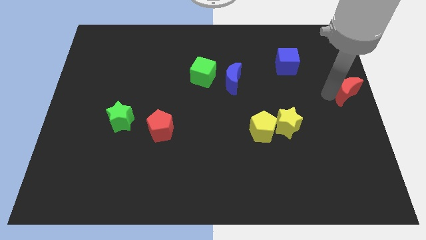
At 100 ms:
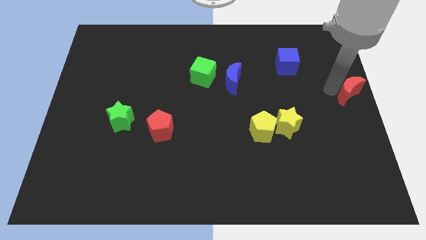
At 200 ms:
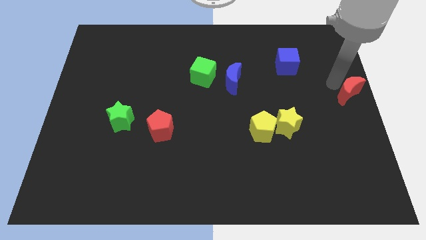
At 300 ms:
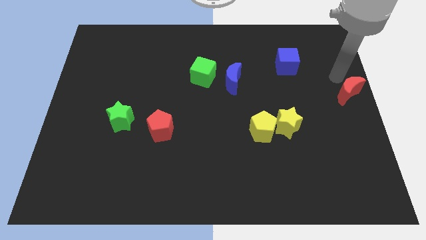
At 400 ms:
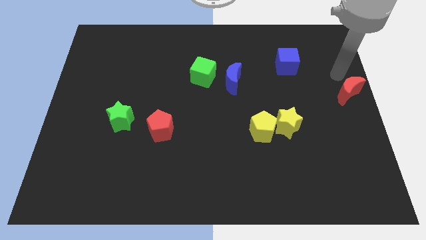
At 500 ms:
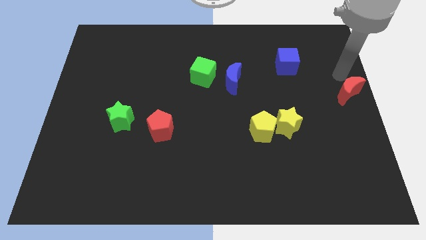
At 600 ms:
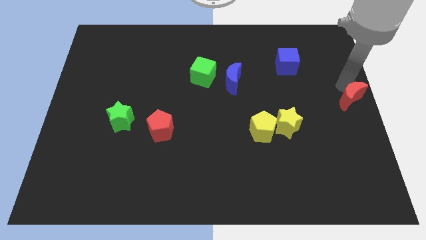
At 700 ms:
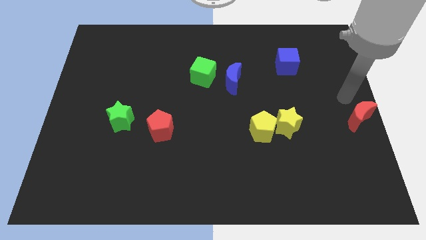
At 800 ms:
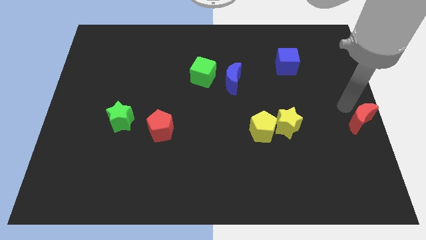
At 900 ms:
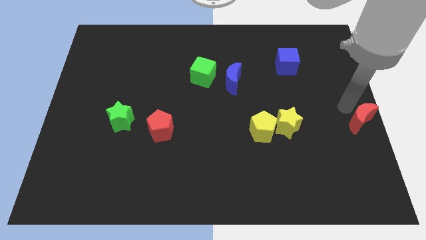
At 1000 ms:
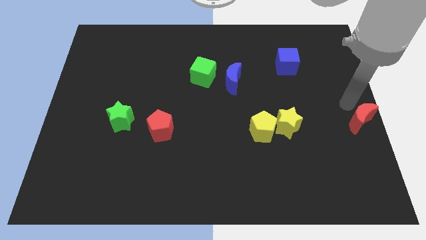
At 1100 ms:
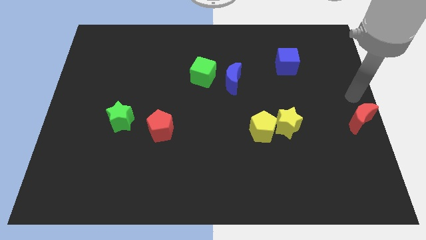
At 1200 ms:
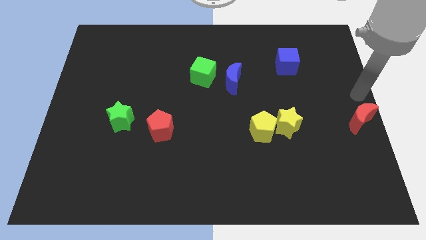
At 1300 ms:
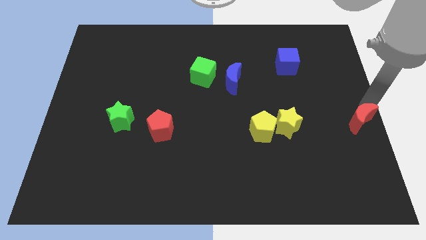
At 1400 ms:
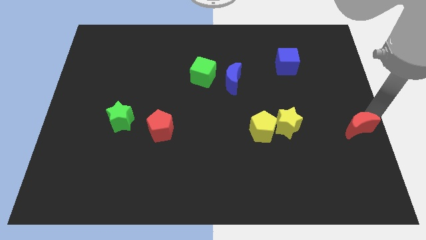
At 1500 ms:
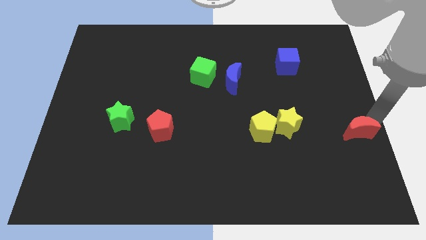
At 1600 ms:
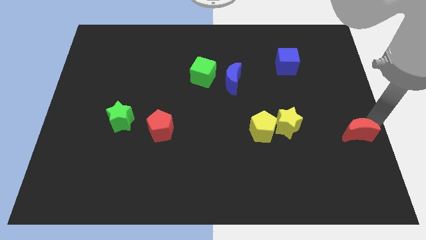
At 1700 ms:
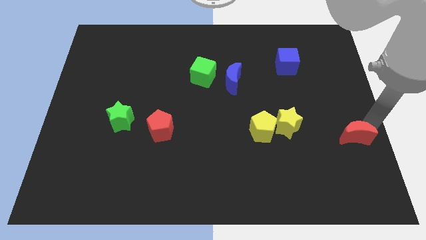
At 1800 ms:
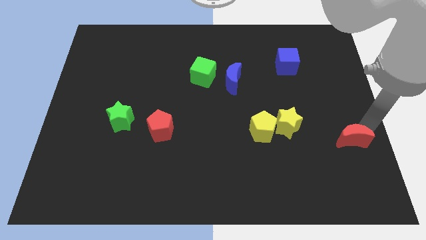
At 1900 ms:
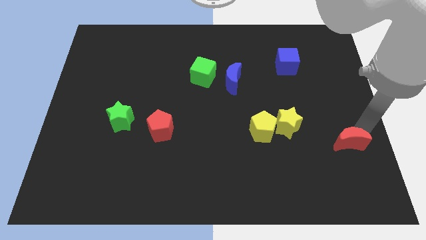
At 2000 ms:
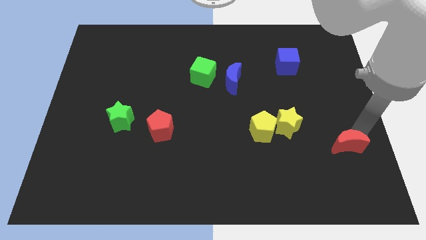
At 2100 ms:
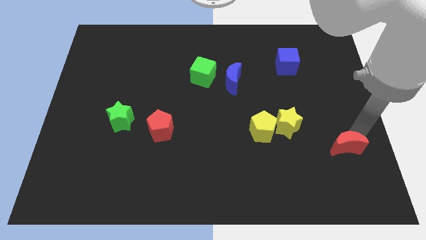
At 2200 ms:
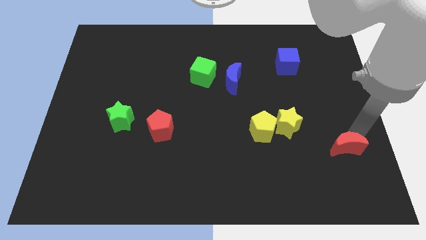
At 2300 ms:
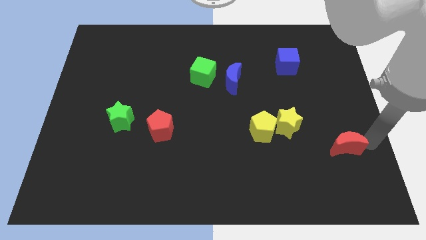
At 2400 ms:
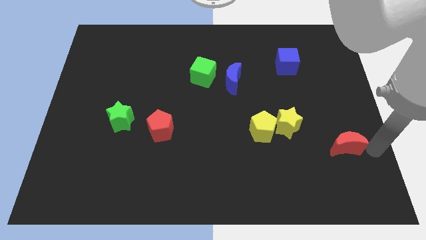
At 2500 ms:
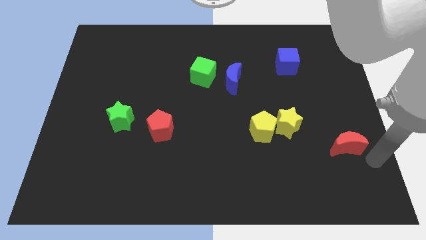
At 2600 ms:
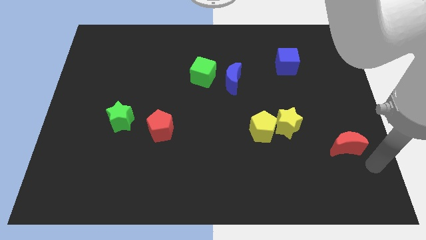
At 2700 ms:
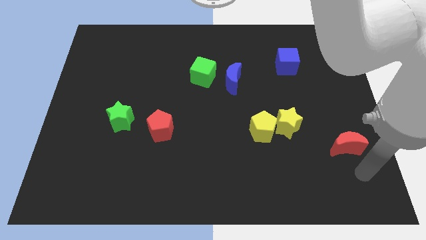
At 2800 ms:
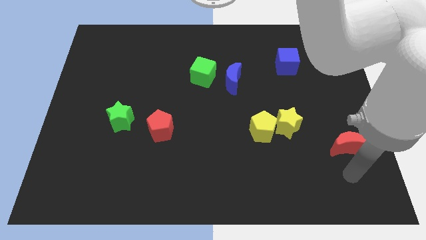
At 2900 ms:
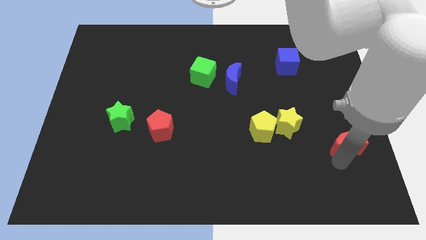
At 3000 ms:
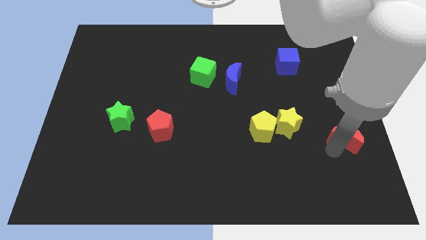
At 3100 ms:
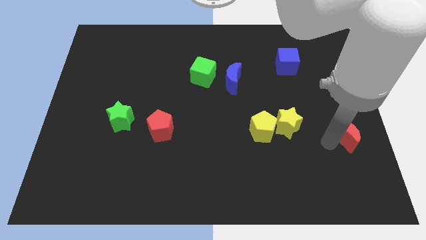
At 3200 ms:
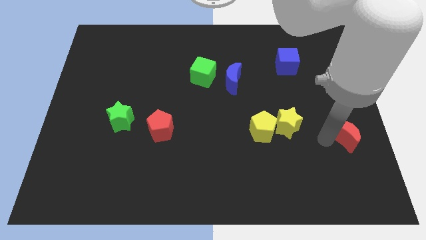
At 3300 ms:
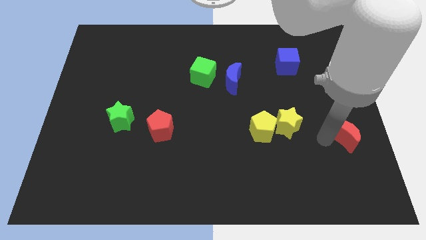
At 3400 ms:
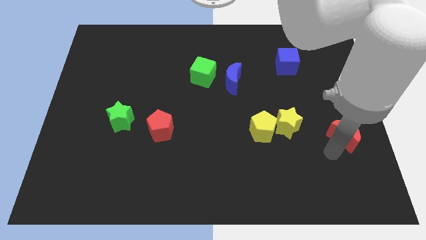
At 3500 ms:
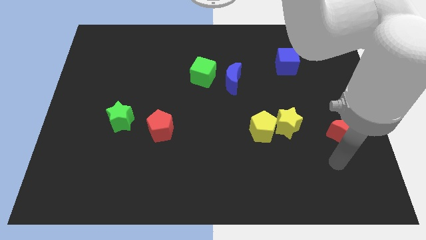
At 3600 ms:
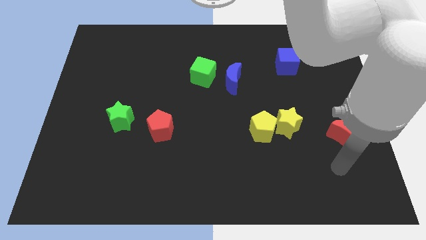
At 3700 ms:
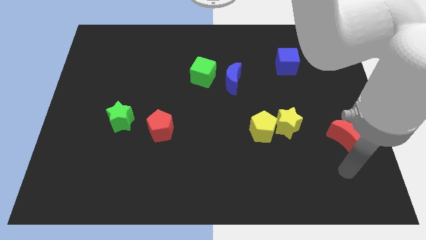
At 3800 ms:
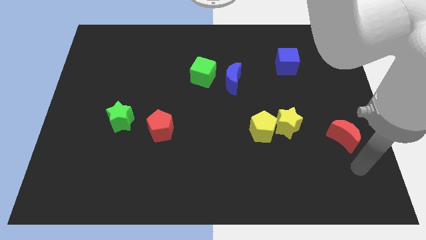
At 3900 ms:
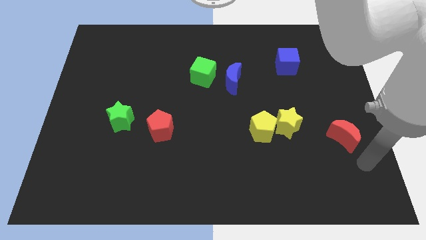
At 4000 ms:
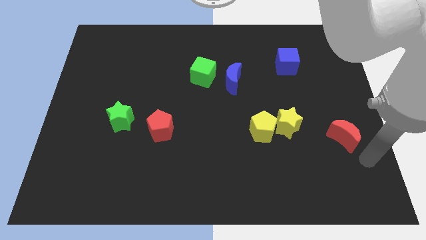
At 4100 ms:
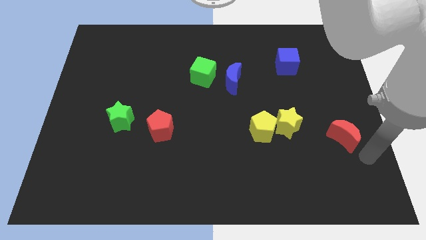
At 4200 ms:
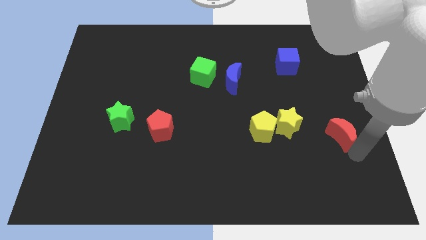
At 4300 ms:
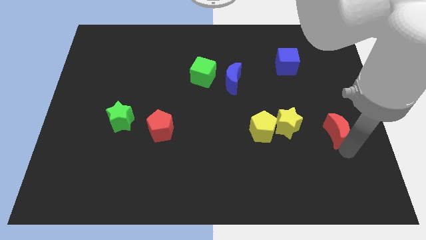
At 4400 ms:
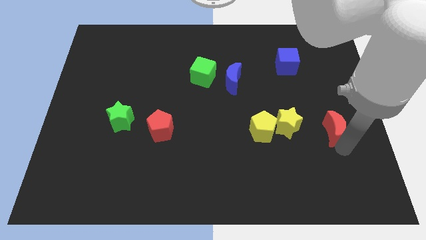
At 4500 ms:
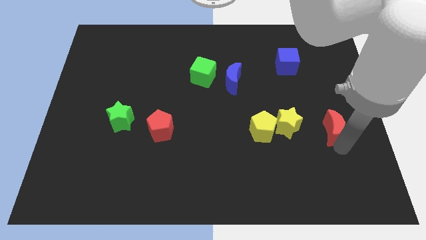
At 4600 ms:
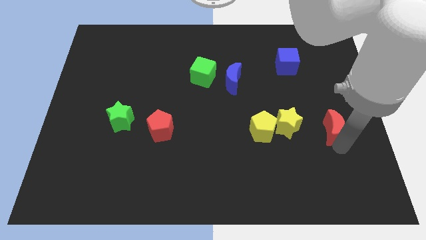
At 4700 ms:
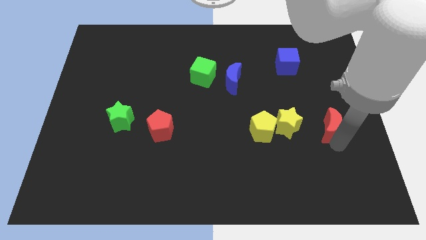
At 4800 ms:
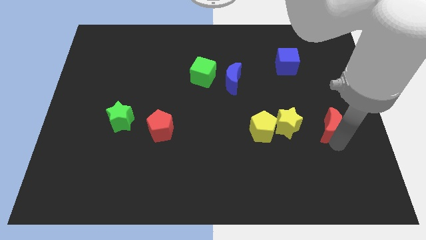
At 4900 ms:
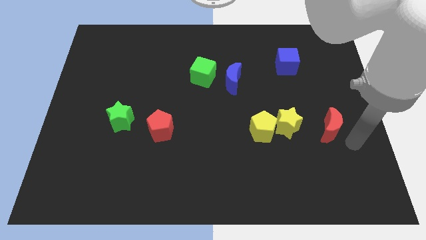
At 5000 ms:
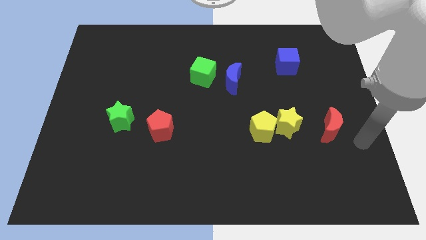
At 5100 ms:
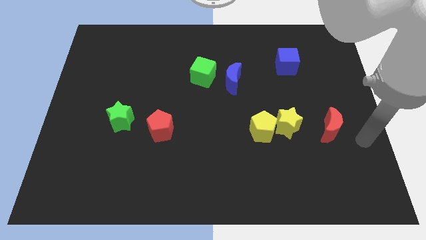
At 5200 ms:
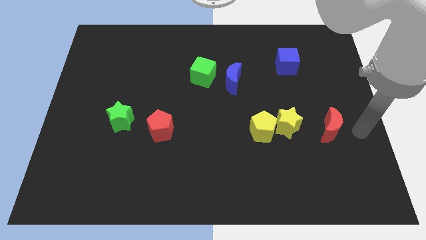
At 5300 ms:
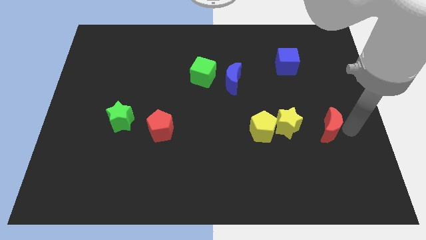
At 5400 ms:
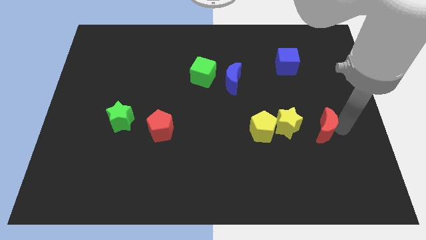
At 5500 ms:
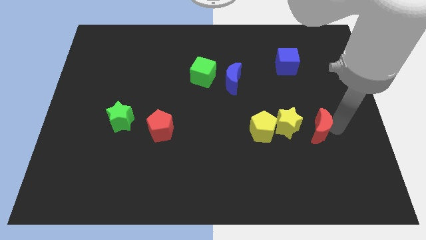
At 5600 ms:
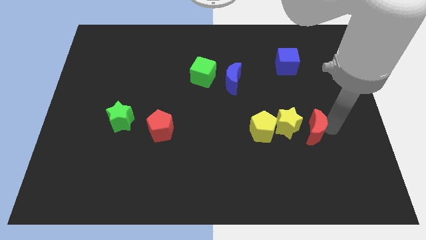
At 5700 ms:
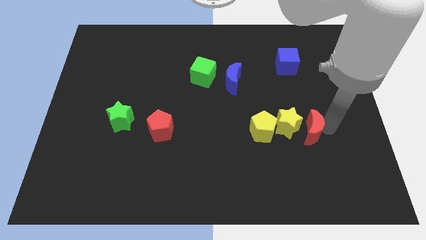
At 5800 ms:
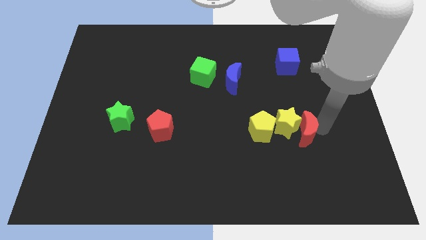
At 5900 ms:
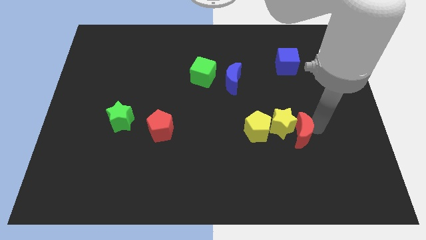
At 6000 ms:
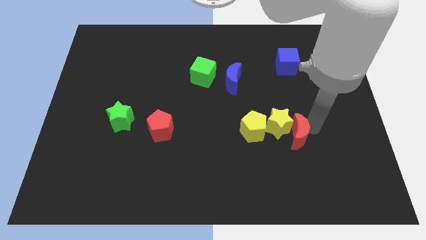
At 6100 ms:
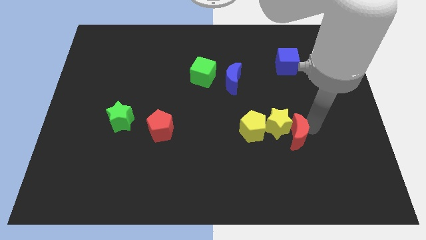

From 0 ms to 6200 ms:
push the red moon into the yellow star and yellow pentagon

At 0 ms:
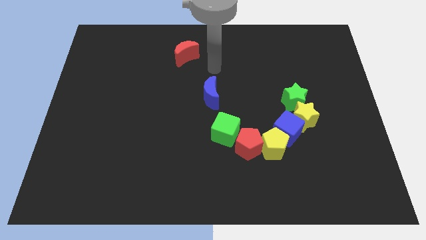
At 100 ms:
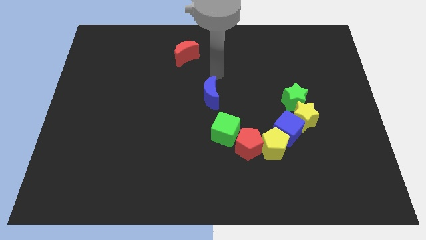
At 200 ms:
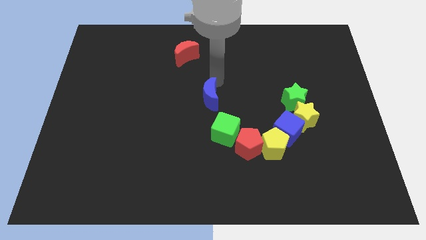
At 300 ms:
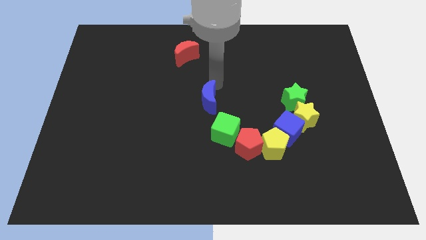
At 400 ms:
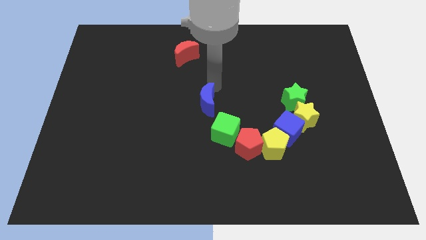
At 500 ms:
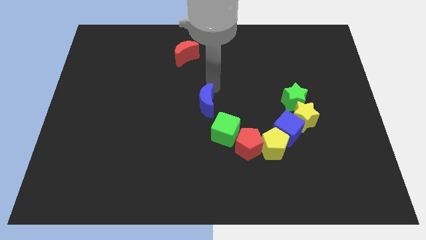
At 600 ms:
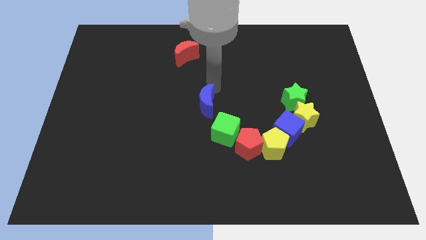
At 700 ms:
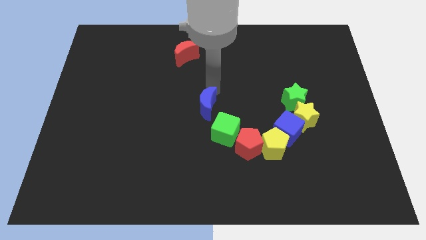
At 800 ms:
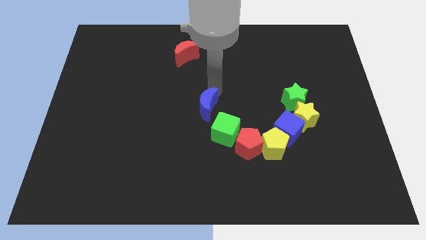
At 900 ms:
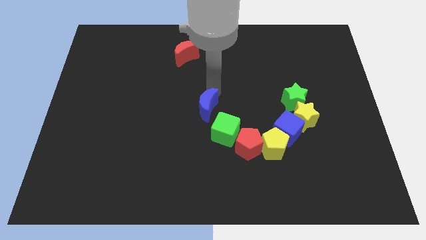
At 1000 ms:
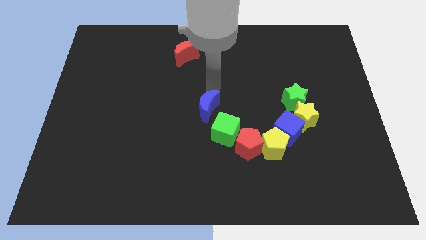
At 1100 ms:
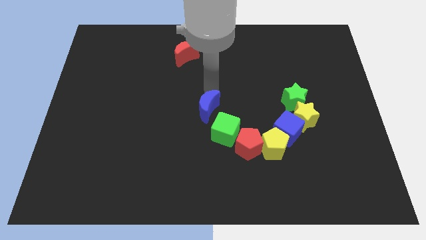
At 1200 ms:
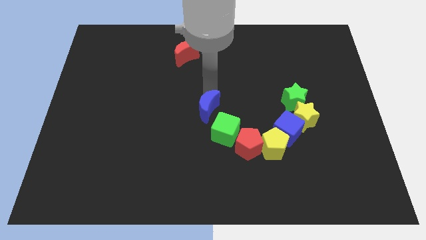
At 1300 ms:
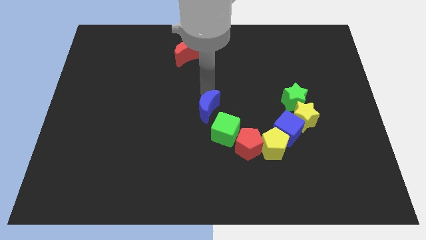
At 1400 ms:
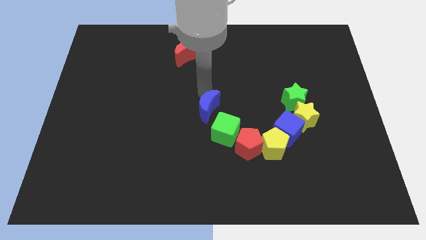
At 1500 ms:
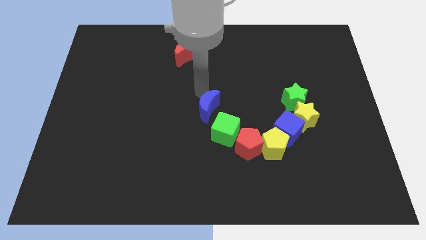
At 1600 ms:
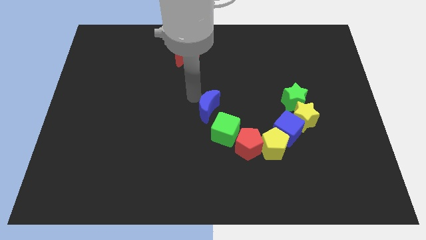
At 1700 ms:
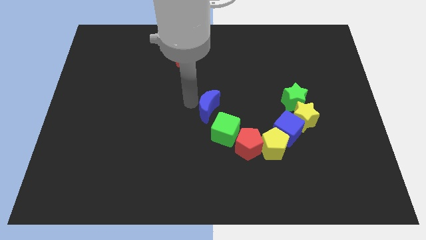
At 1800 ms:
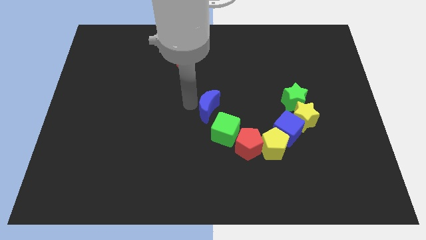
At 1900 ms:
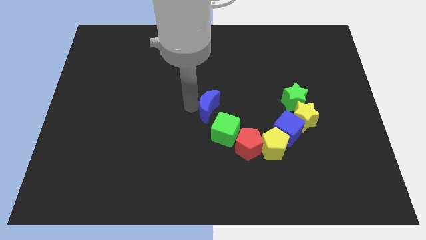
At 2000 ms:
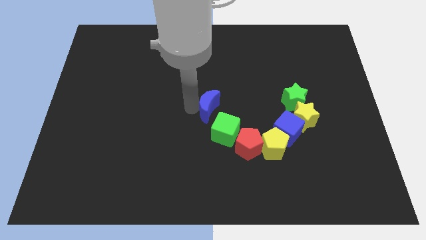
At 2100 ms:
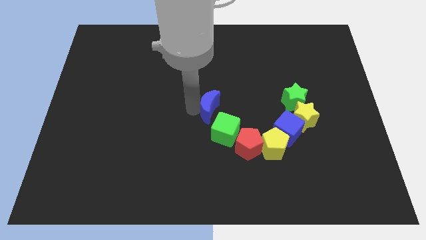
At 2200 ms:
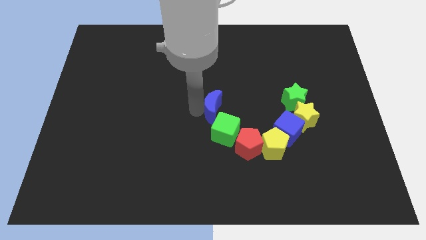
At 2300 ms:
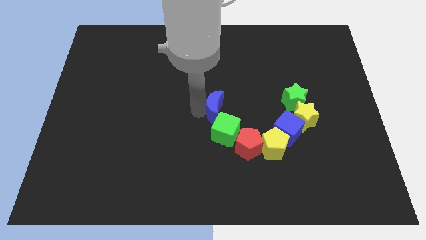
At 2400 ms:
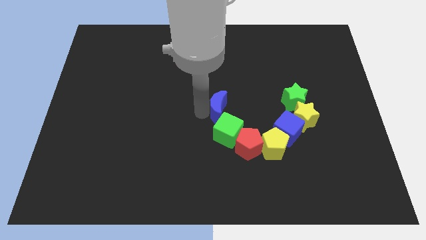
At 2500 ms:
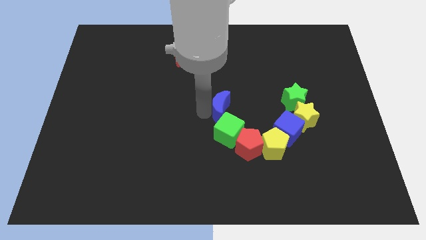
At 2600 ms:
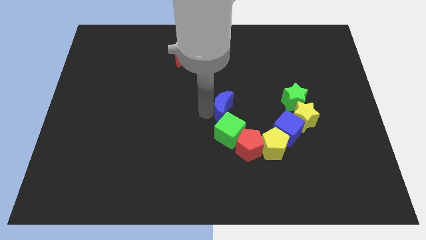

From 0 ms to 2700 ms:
push the blue crescent into the green cube

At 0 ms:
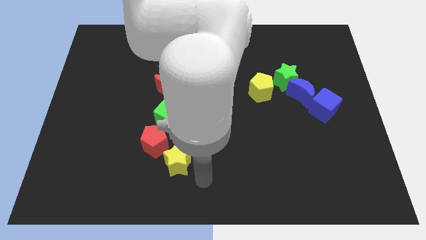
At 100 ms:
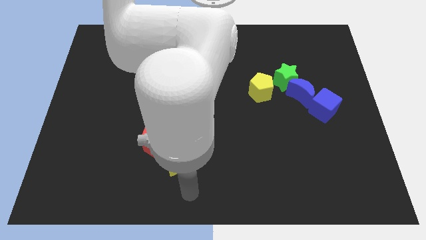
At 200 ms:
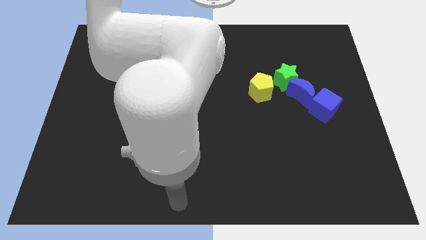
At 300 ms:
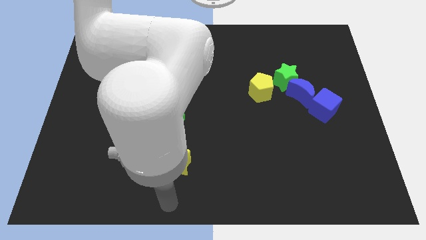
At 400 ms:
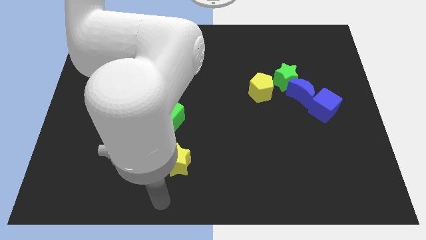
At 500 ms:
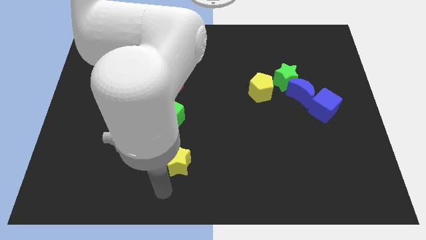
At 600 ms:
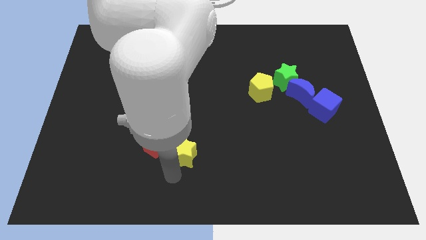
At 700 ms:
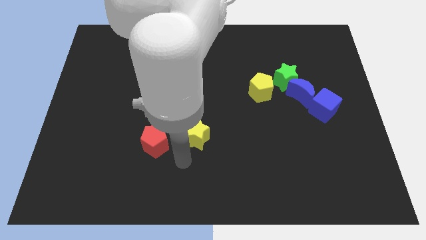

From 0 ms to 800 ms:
push yellow star diagonally right below green cube
